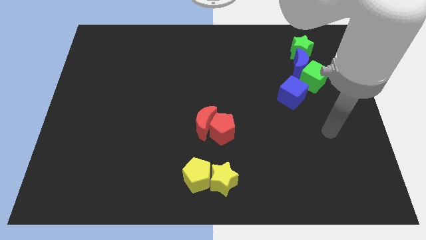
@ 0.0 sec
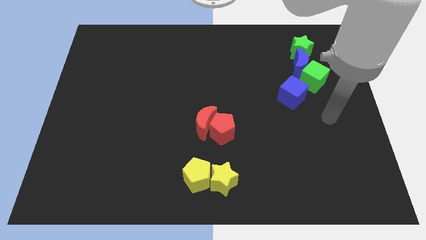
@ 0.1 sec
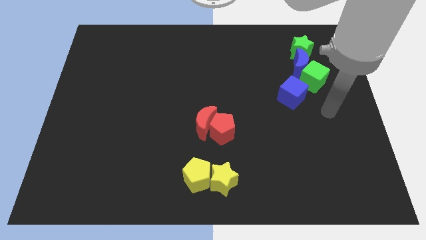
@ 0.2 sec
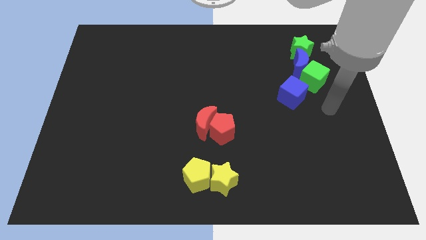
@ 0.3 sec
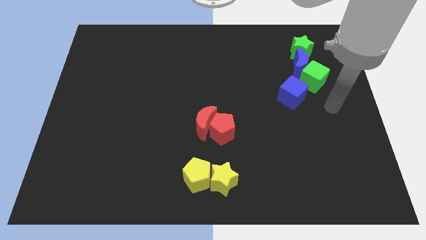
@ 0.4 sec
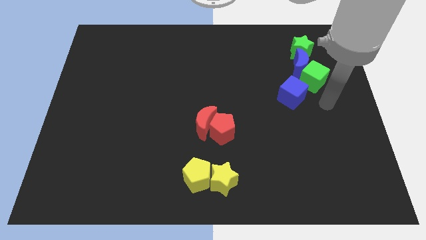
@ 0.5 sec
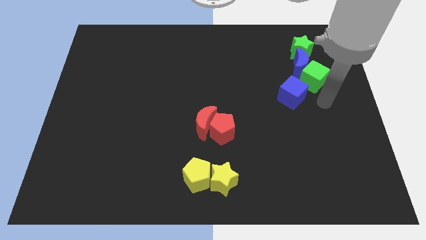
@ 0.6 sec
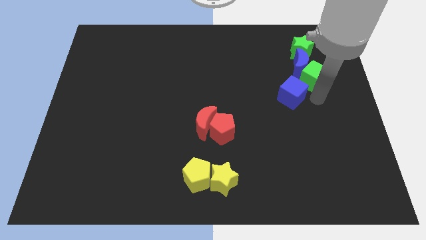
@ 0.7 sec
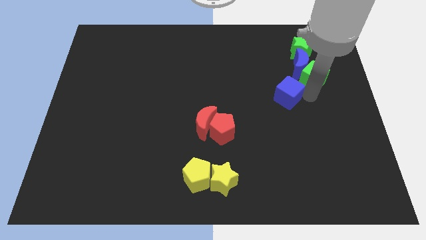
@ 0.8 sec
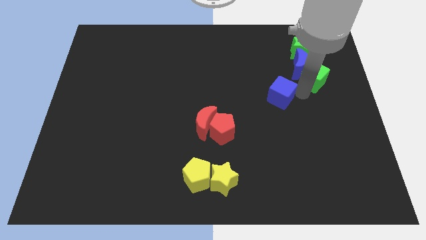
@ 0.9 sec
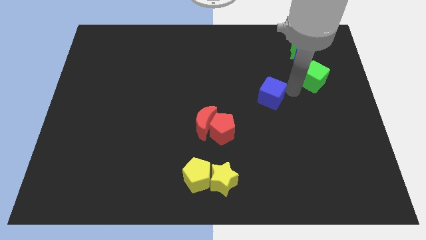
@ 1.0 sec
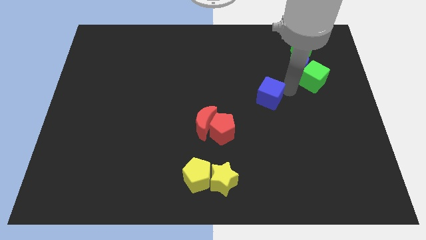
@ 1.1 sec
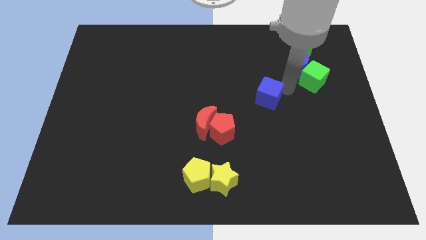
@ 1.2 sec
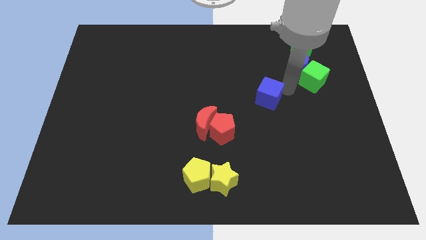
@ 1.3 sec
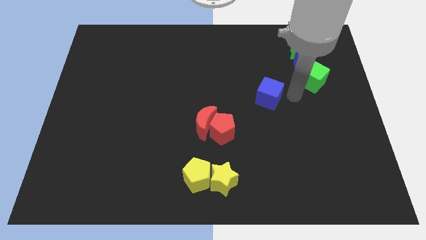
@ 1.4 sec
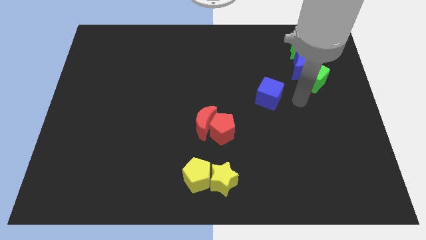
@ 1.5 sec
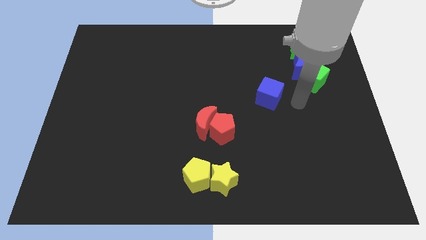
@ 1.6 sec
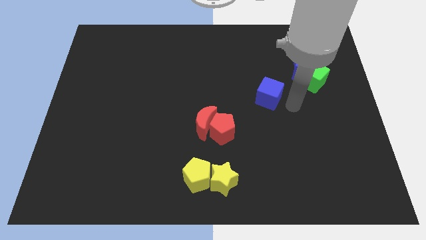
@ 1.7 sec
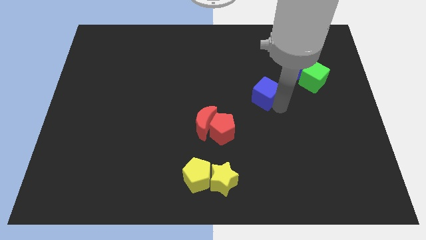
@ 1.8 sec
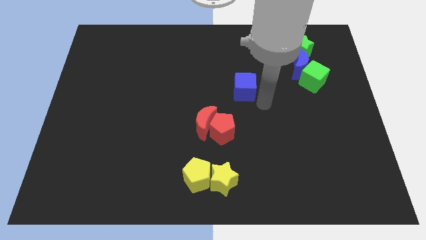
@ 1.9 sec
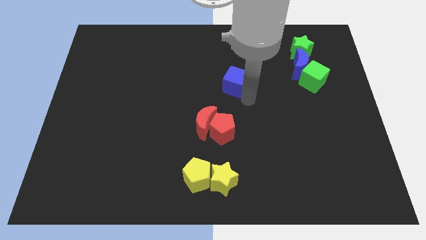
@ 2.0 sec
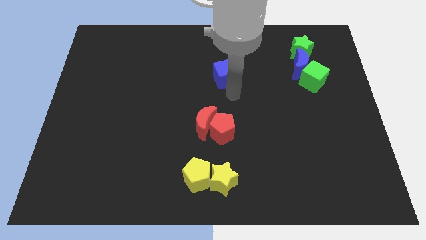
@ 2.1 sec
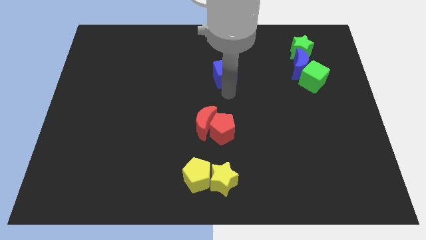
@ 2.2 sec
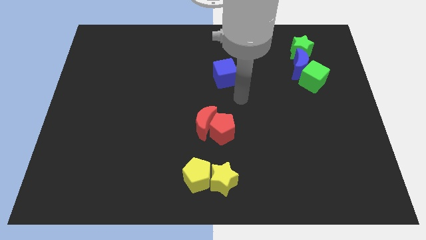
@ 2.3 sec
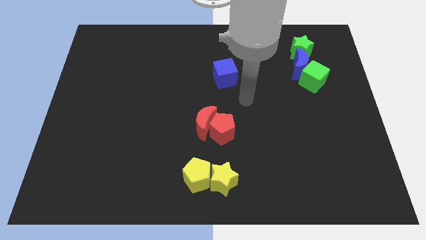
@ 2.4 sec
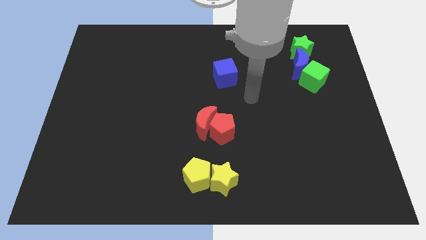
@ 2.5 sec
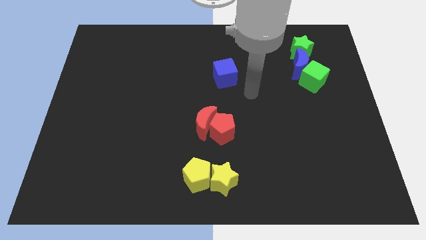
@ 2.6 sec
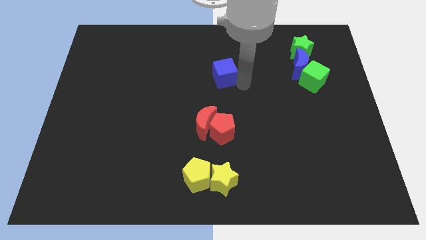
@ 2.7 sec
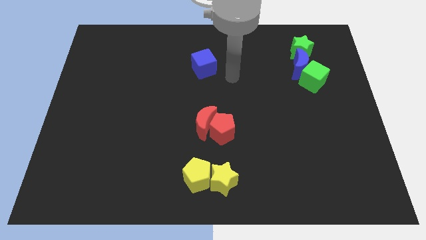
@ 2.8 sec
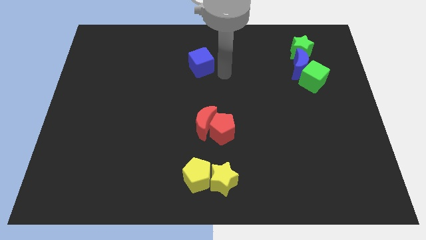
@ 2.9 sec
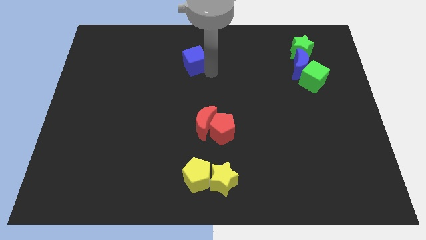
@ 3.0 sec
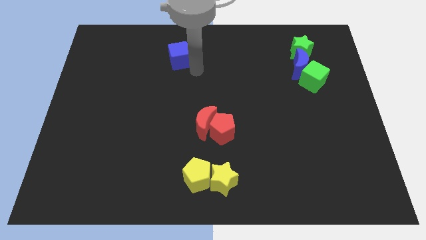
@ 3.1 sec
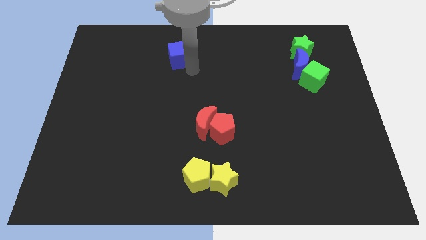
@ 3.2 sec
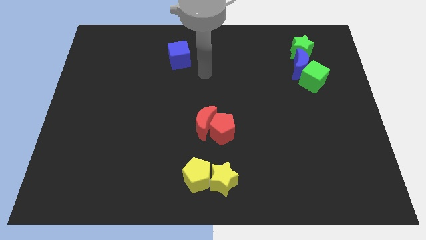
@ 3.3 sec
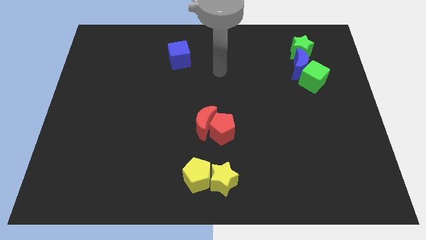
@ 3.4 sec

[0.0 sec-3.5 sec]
slide the blue cube towards the top

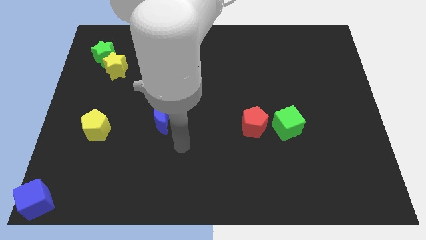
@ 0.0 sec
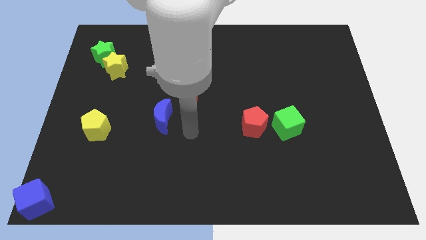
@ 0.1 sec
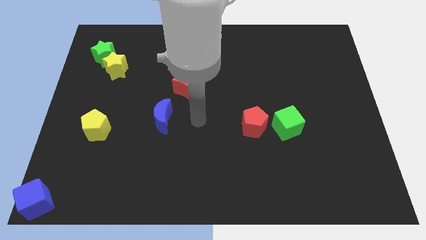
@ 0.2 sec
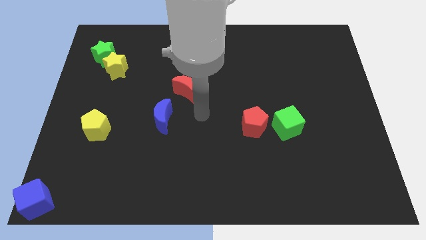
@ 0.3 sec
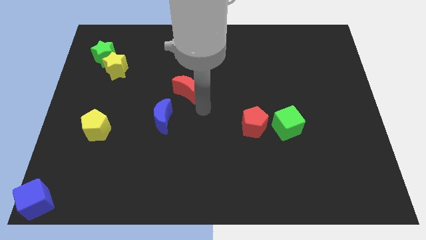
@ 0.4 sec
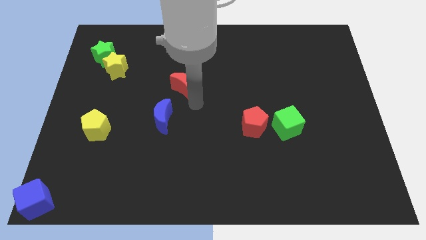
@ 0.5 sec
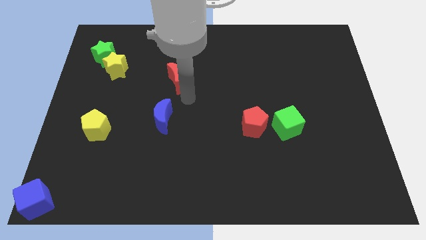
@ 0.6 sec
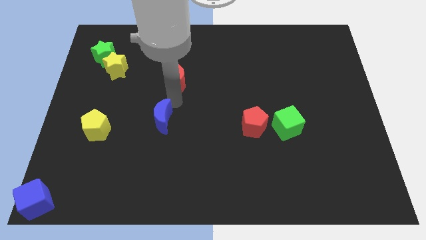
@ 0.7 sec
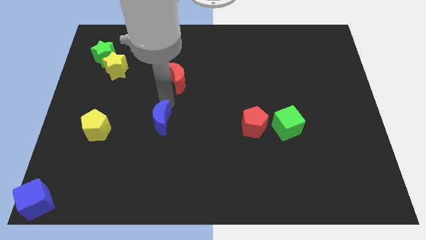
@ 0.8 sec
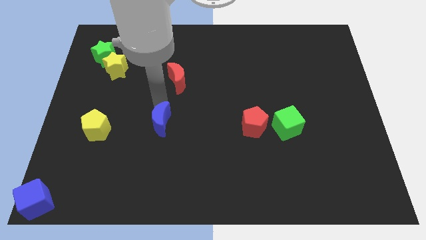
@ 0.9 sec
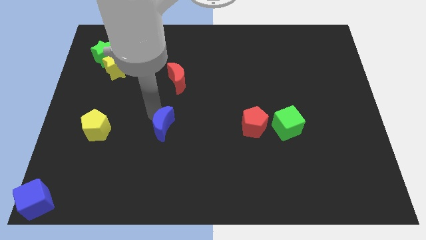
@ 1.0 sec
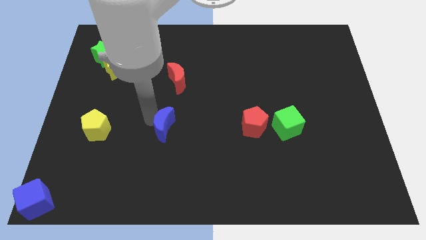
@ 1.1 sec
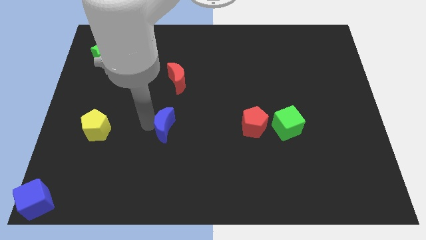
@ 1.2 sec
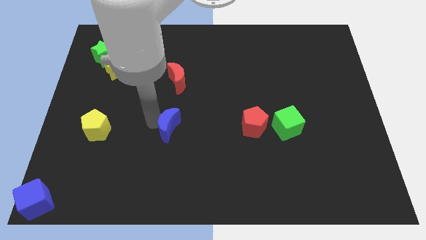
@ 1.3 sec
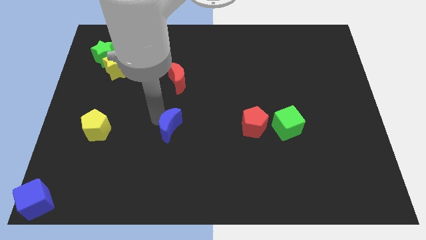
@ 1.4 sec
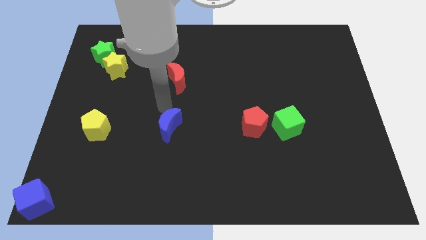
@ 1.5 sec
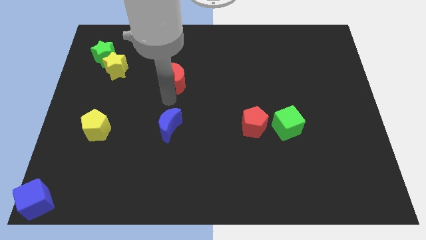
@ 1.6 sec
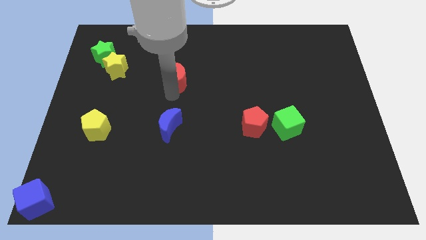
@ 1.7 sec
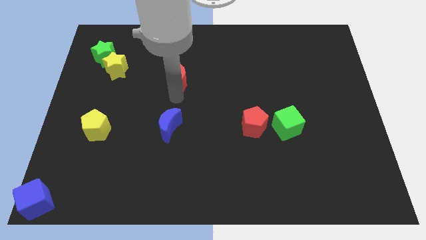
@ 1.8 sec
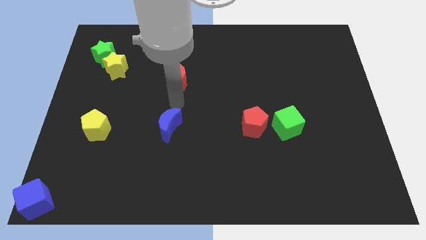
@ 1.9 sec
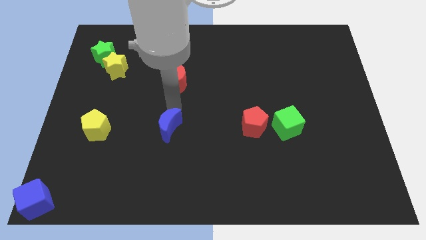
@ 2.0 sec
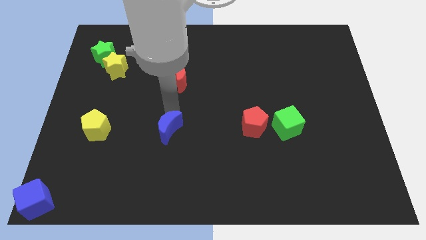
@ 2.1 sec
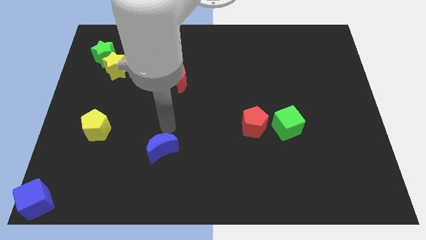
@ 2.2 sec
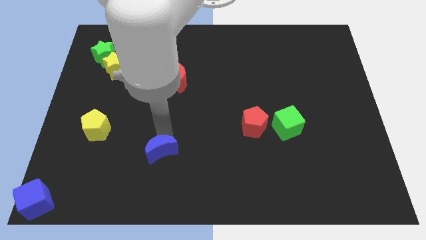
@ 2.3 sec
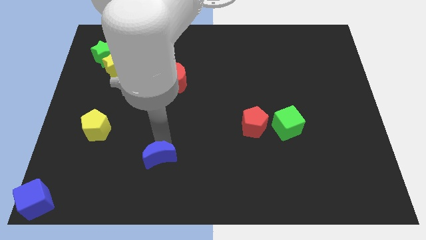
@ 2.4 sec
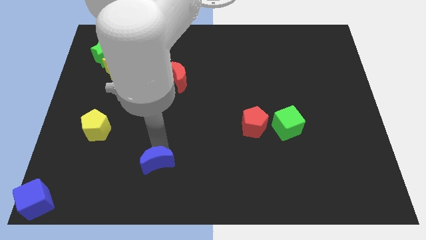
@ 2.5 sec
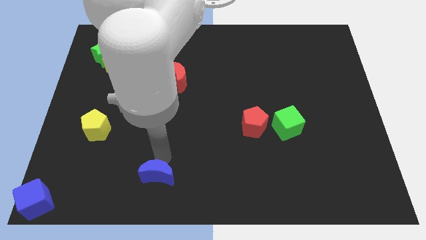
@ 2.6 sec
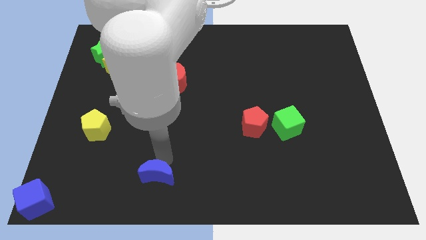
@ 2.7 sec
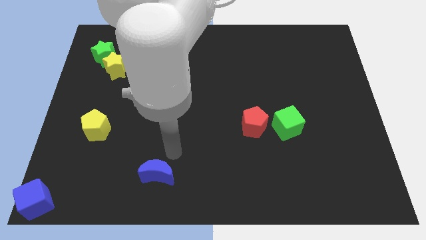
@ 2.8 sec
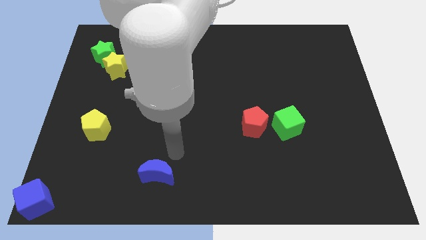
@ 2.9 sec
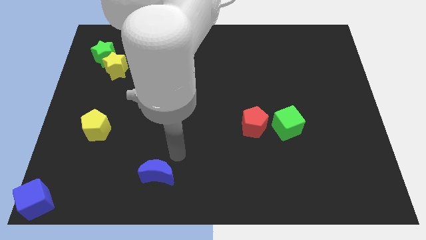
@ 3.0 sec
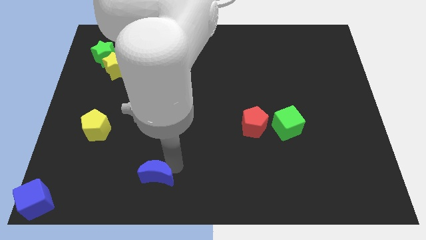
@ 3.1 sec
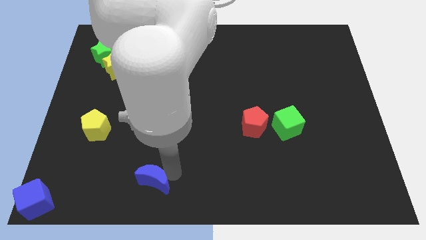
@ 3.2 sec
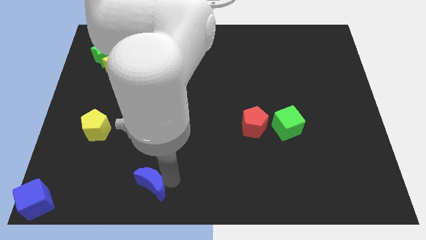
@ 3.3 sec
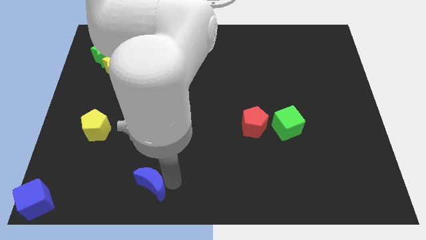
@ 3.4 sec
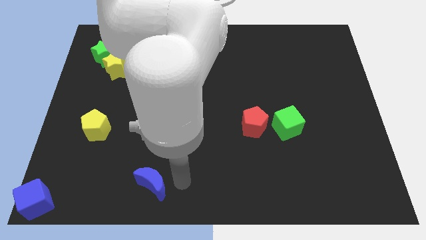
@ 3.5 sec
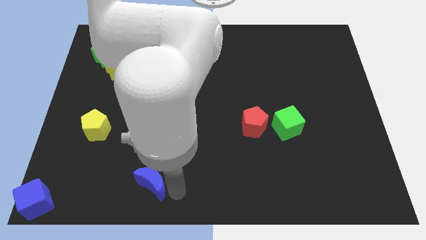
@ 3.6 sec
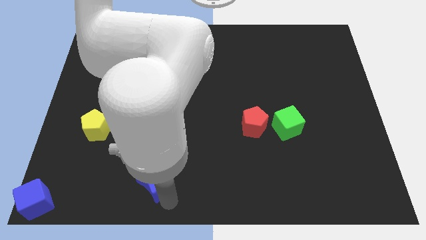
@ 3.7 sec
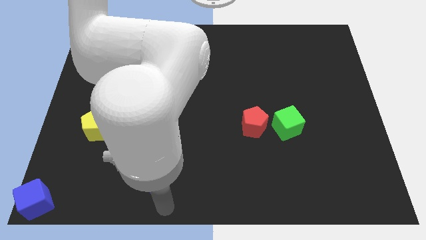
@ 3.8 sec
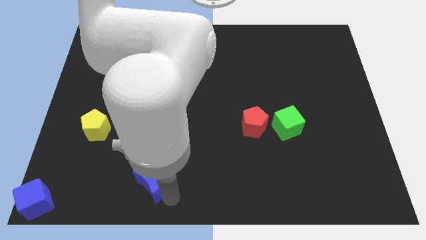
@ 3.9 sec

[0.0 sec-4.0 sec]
separate the blue crescent from the red crescent

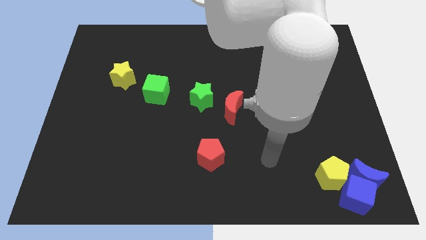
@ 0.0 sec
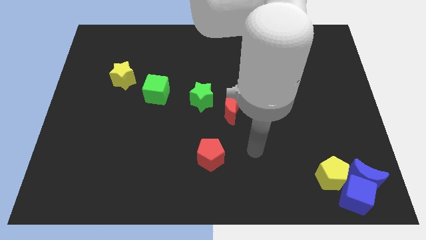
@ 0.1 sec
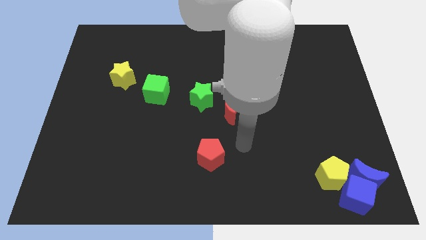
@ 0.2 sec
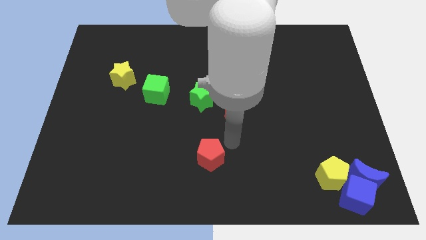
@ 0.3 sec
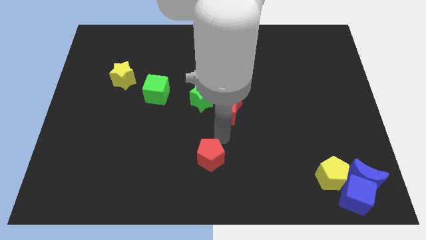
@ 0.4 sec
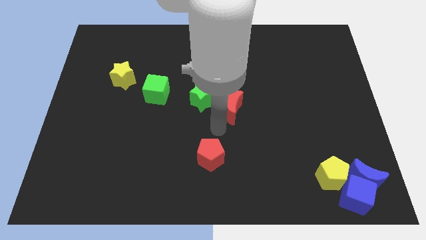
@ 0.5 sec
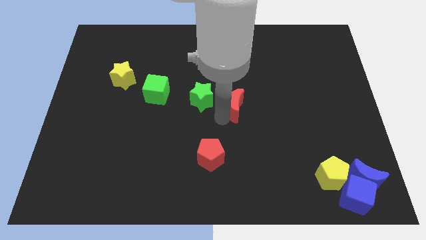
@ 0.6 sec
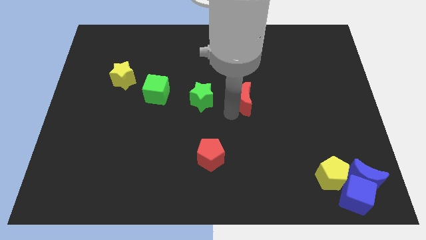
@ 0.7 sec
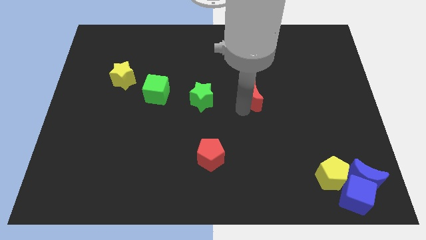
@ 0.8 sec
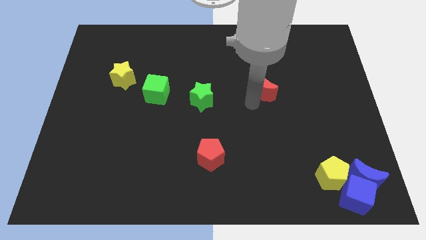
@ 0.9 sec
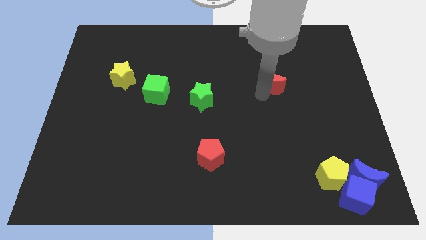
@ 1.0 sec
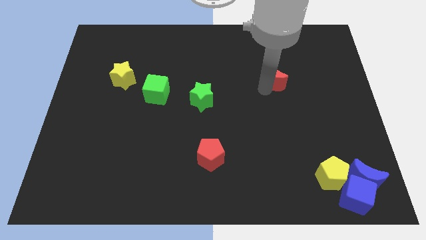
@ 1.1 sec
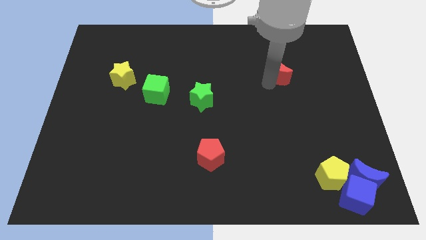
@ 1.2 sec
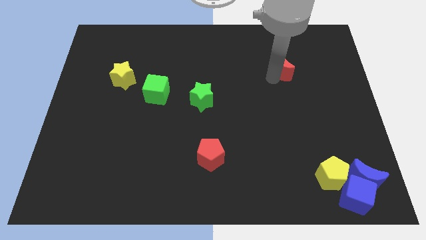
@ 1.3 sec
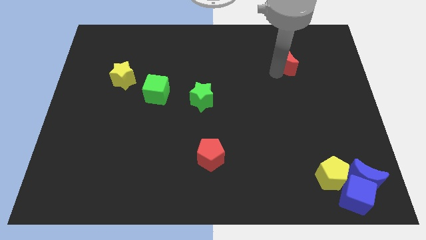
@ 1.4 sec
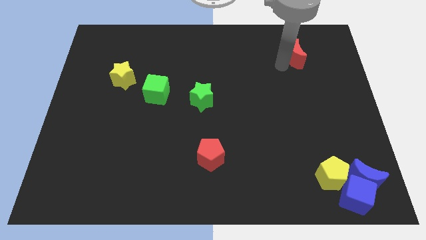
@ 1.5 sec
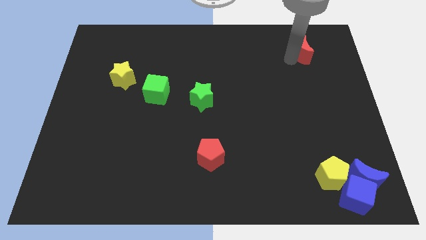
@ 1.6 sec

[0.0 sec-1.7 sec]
push the red moon towards the top right
